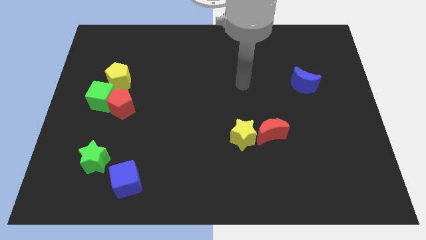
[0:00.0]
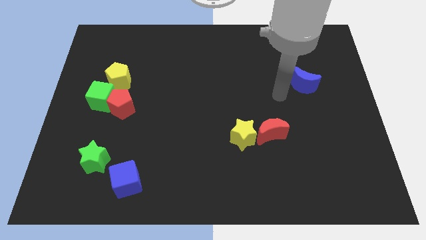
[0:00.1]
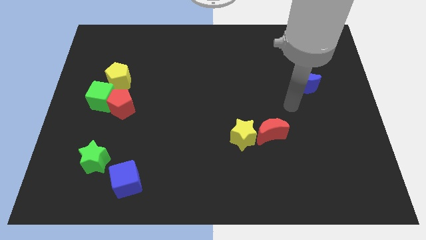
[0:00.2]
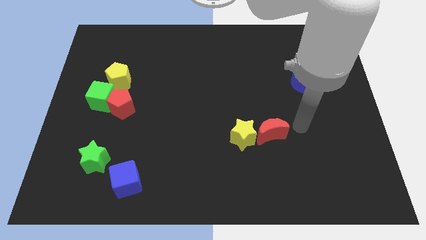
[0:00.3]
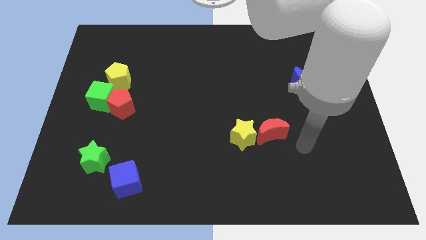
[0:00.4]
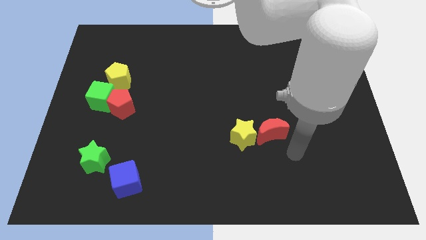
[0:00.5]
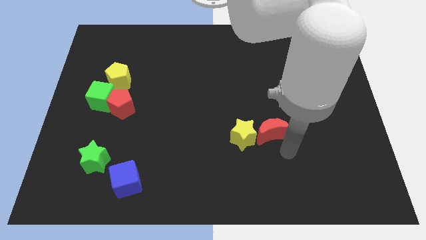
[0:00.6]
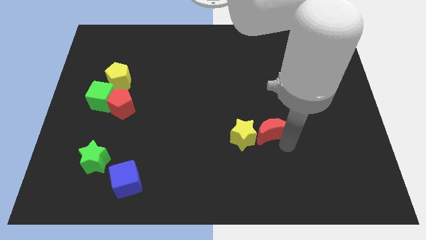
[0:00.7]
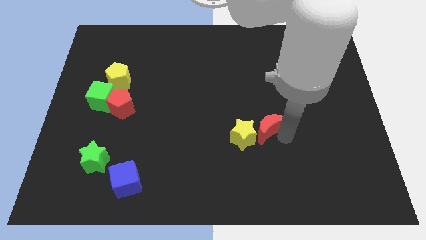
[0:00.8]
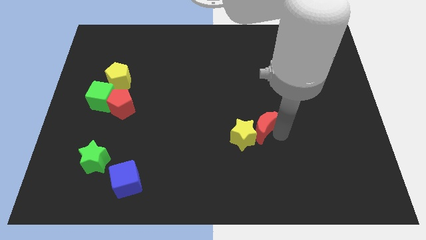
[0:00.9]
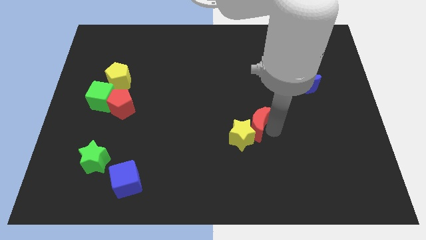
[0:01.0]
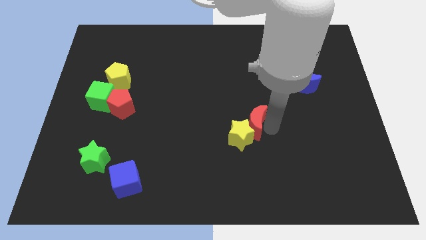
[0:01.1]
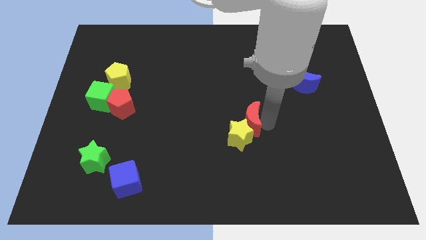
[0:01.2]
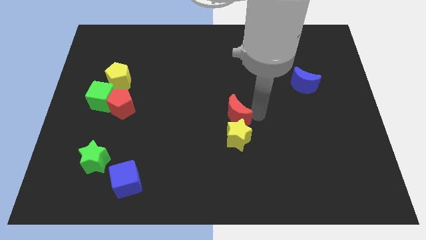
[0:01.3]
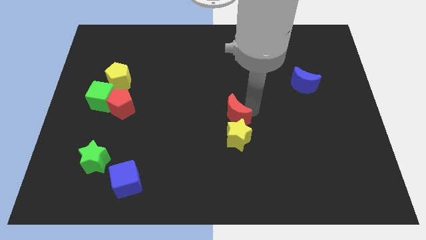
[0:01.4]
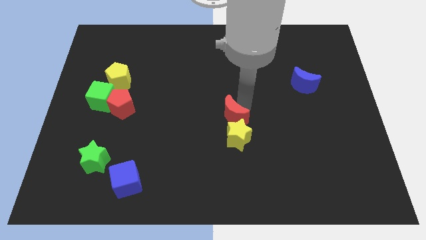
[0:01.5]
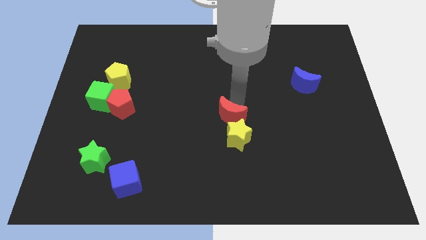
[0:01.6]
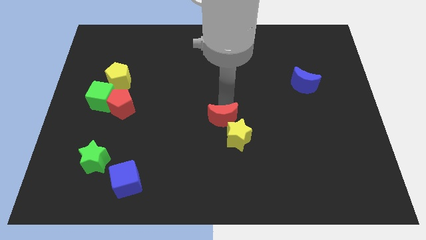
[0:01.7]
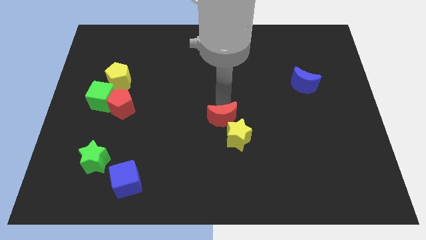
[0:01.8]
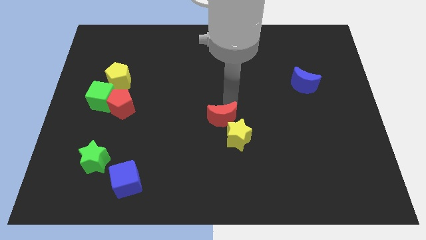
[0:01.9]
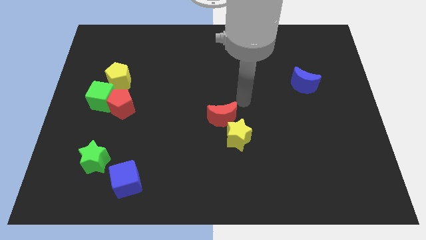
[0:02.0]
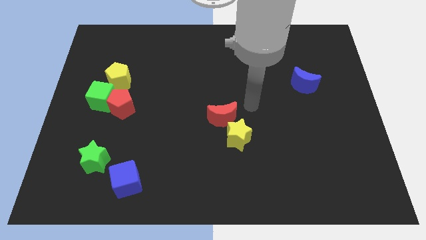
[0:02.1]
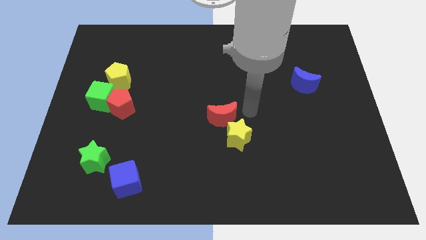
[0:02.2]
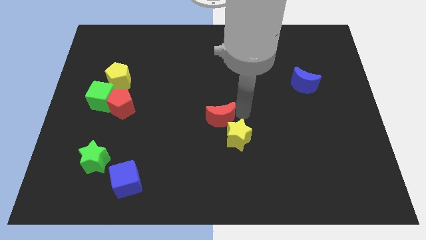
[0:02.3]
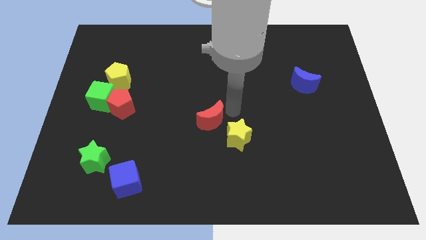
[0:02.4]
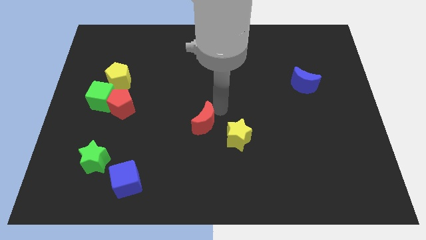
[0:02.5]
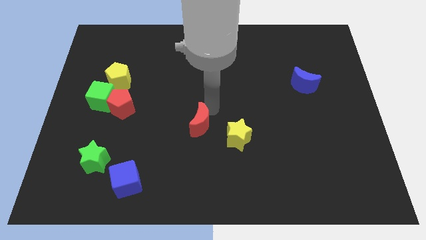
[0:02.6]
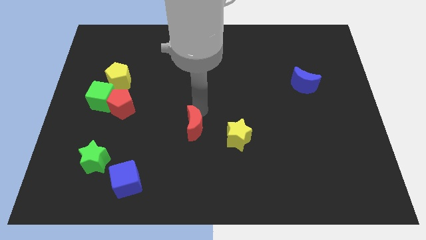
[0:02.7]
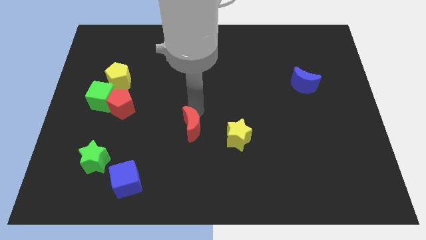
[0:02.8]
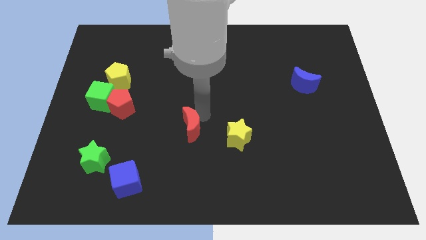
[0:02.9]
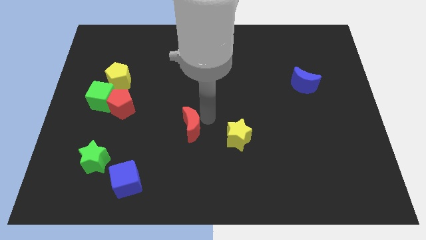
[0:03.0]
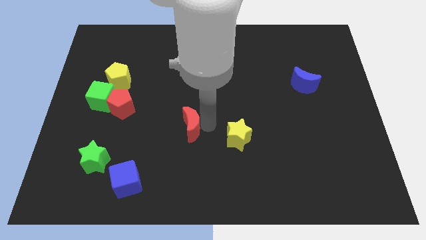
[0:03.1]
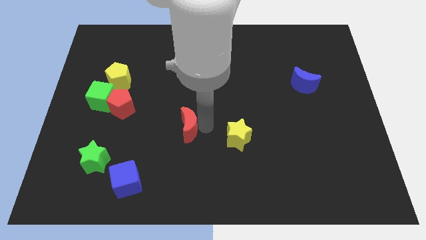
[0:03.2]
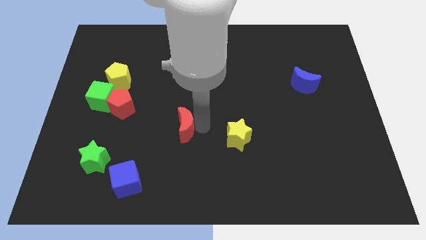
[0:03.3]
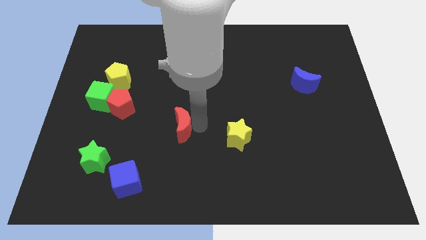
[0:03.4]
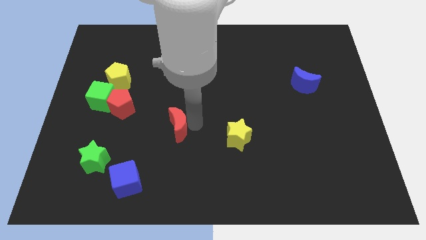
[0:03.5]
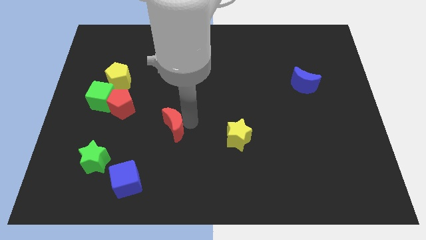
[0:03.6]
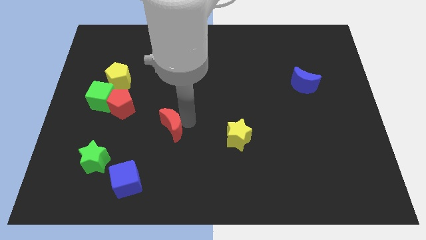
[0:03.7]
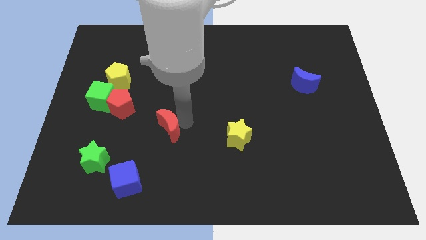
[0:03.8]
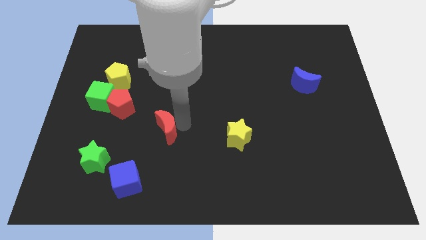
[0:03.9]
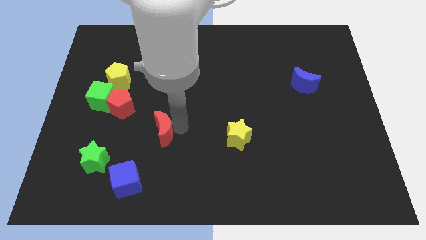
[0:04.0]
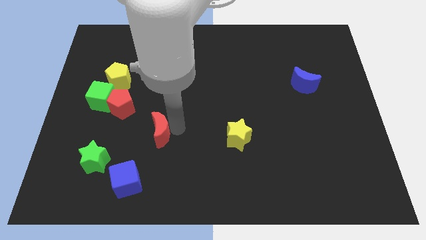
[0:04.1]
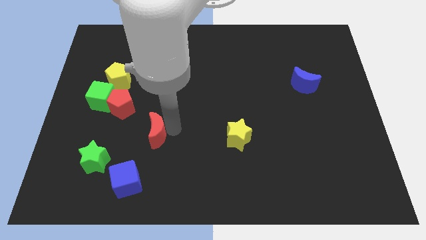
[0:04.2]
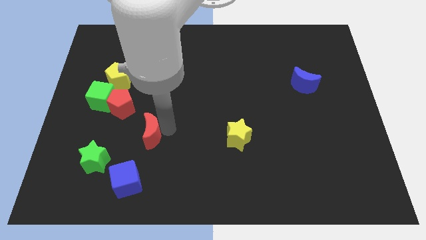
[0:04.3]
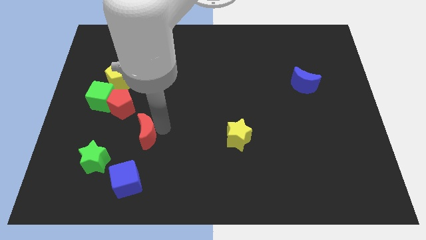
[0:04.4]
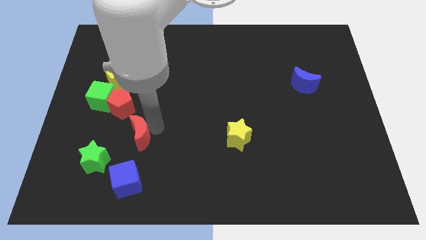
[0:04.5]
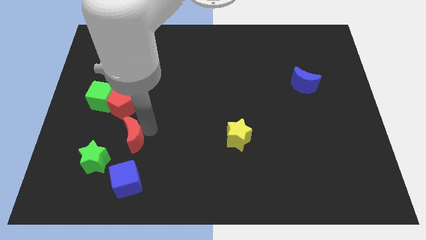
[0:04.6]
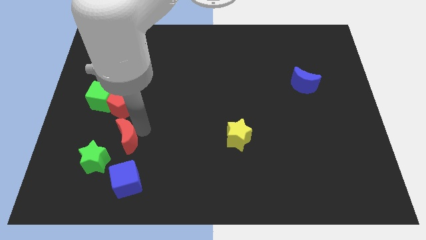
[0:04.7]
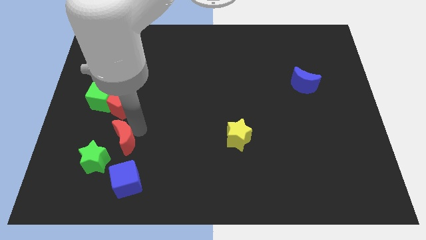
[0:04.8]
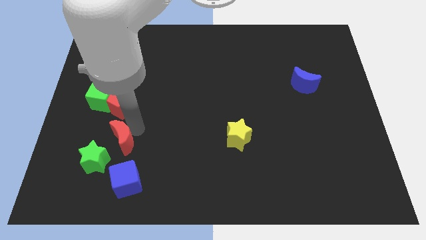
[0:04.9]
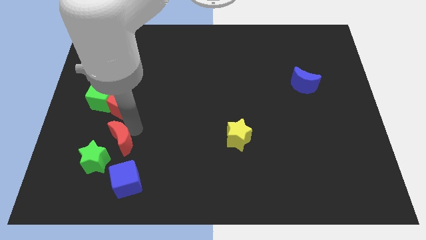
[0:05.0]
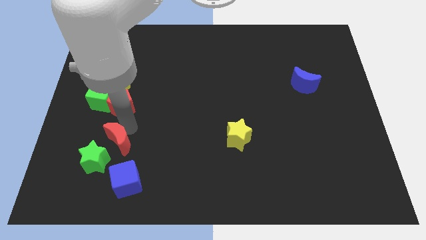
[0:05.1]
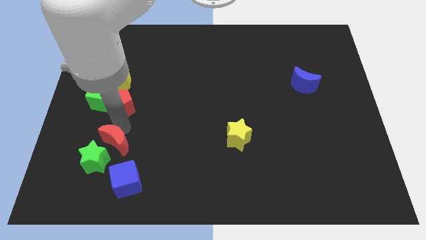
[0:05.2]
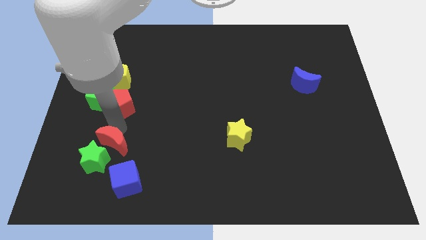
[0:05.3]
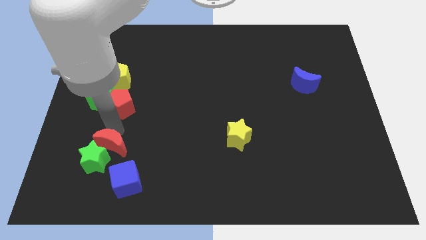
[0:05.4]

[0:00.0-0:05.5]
push the red moon towards the green star

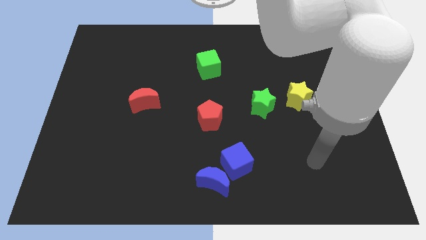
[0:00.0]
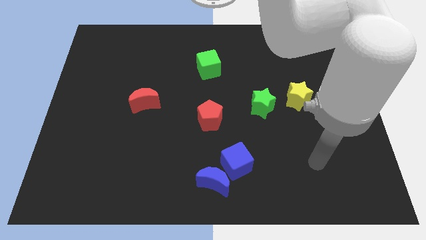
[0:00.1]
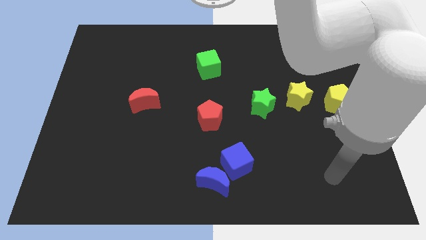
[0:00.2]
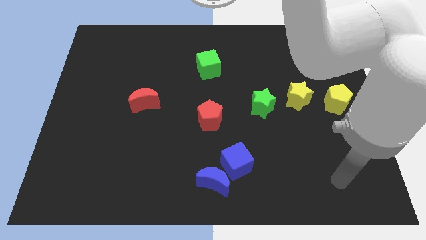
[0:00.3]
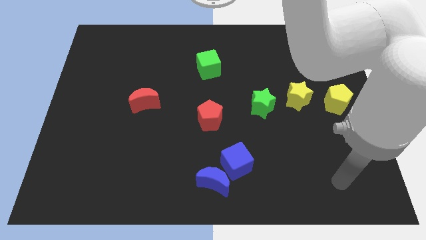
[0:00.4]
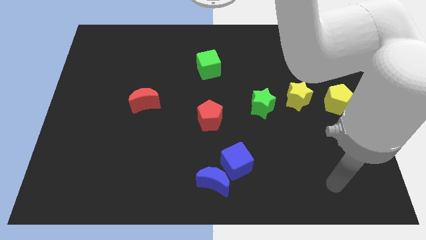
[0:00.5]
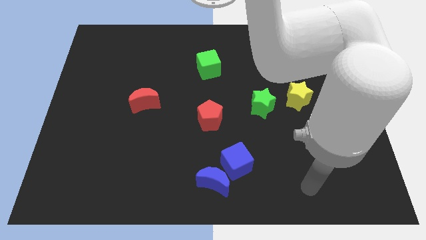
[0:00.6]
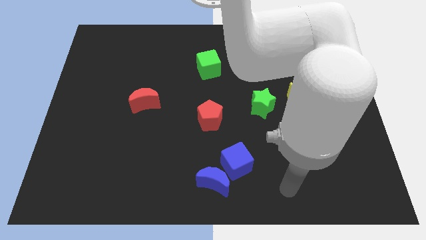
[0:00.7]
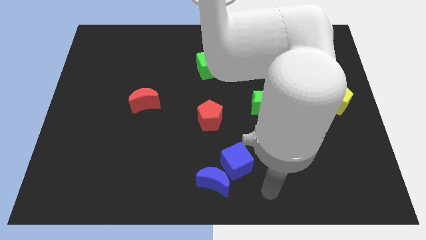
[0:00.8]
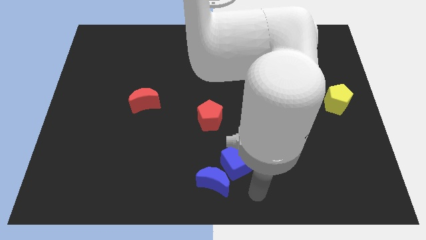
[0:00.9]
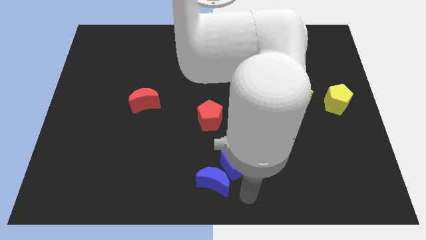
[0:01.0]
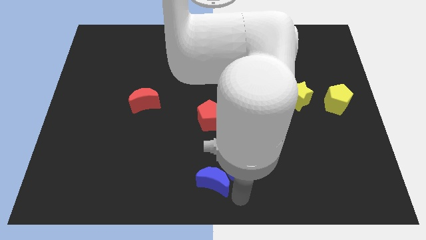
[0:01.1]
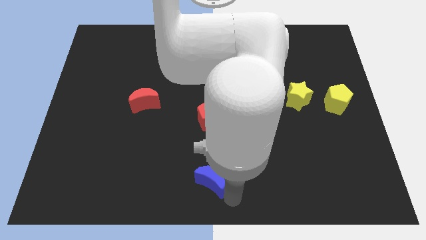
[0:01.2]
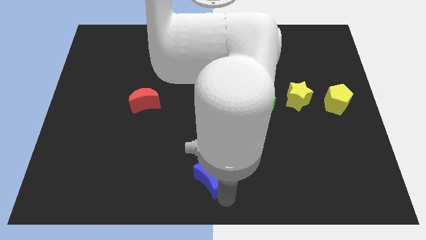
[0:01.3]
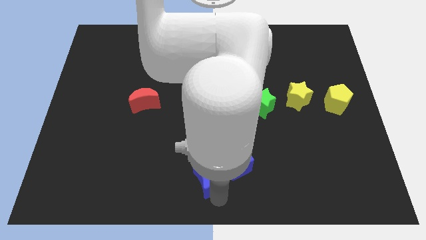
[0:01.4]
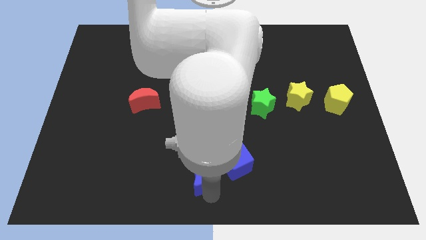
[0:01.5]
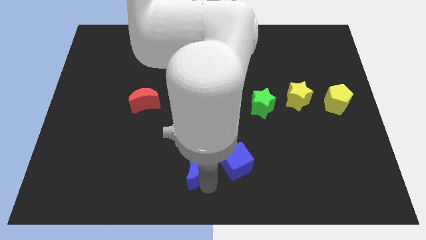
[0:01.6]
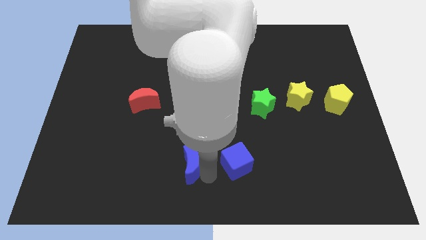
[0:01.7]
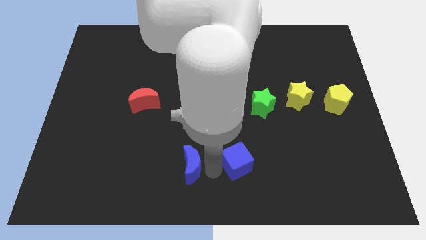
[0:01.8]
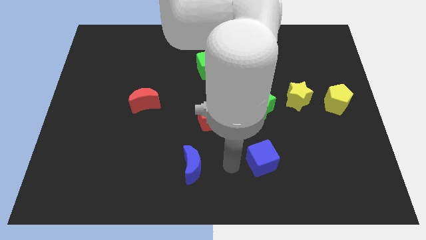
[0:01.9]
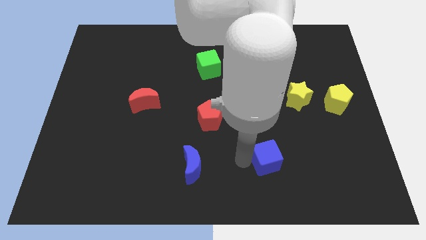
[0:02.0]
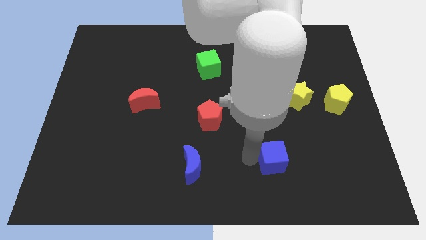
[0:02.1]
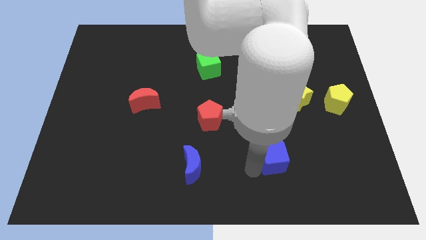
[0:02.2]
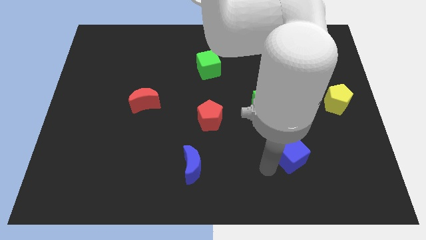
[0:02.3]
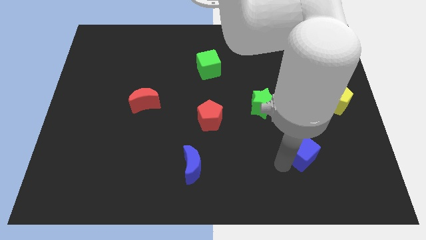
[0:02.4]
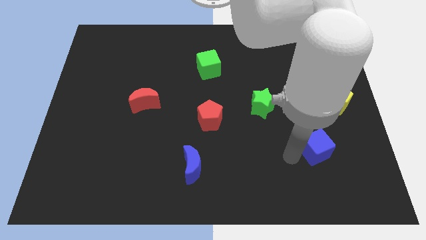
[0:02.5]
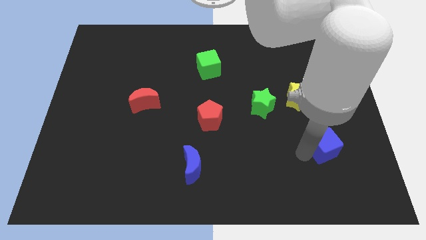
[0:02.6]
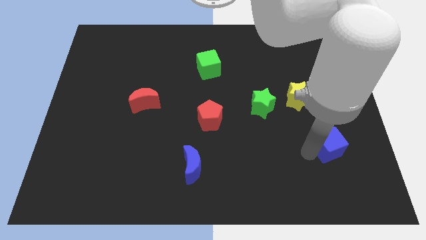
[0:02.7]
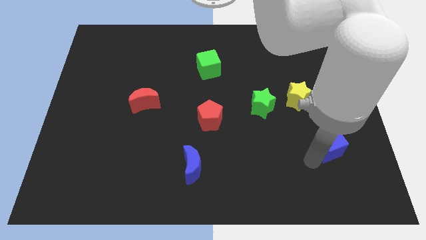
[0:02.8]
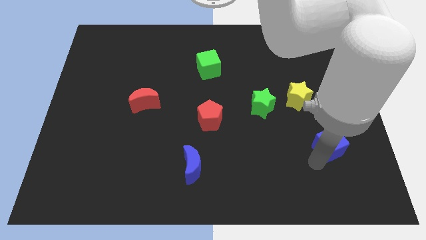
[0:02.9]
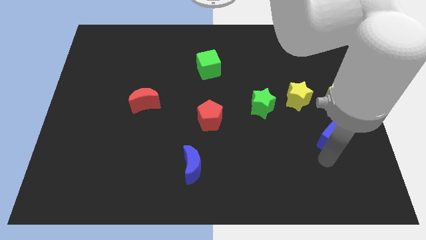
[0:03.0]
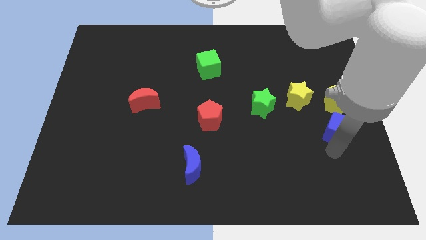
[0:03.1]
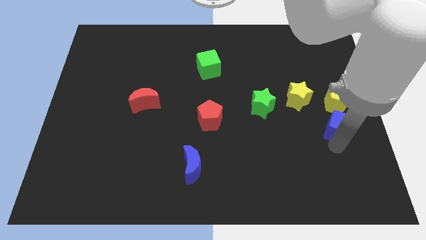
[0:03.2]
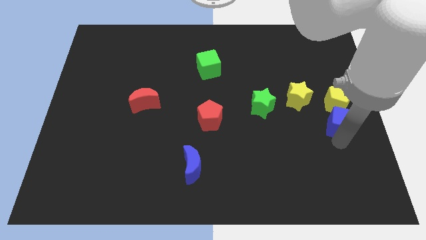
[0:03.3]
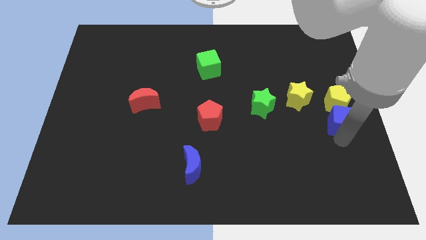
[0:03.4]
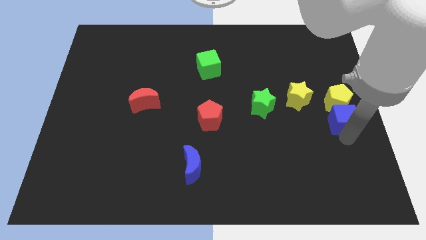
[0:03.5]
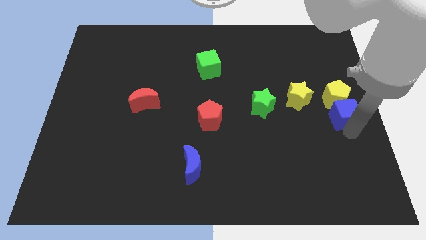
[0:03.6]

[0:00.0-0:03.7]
move the blue cube to the yellow pentagon
